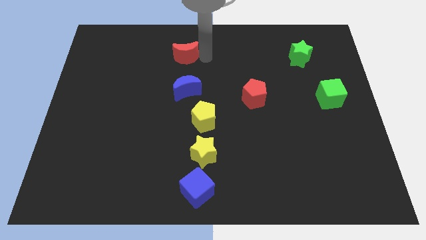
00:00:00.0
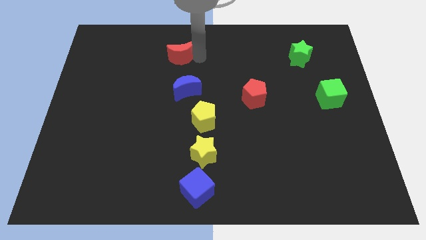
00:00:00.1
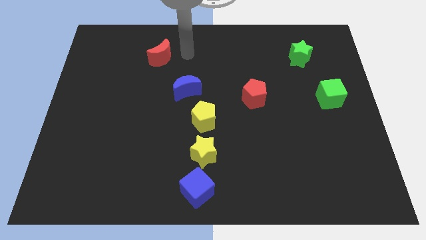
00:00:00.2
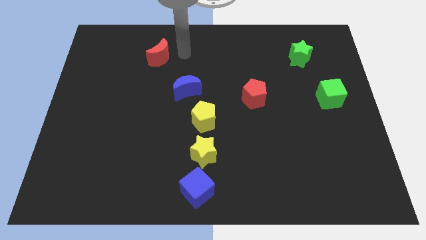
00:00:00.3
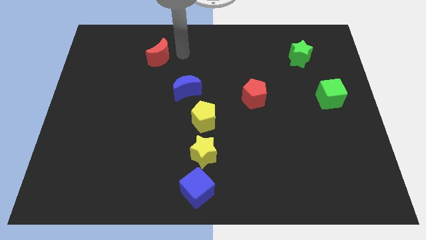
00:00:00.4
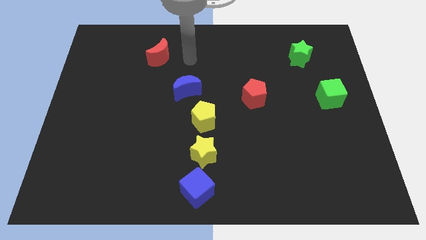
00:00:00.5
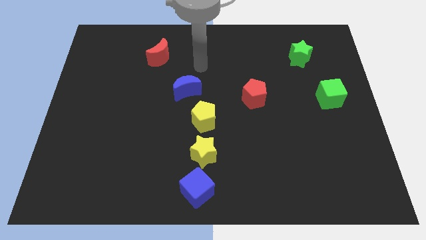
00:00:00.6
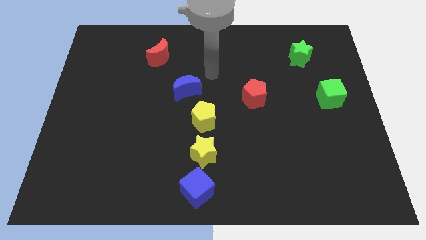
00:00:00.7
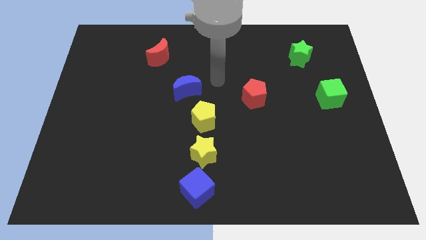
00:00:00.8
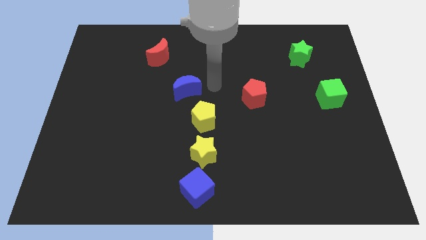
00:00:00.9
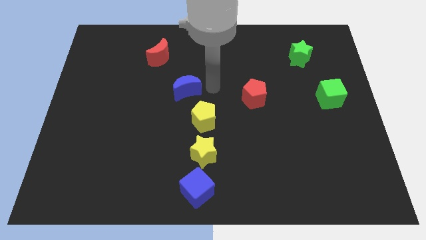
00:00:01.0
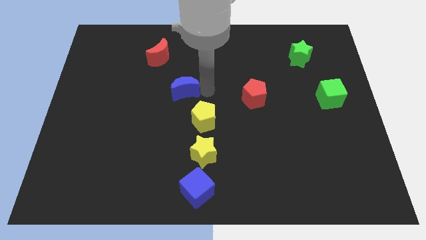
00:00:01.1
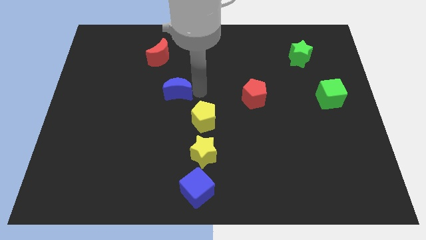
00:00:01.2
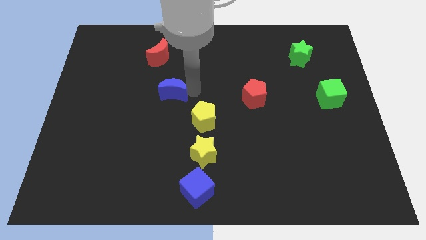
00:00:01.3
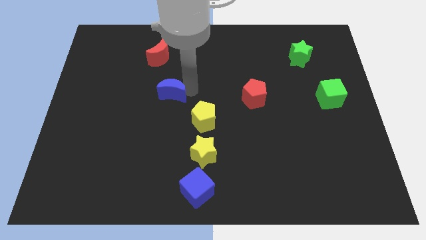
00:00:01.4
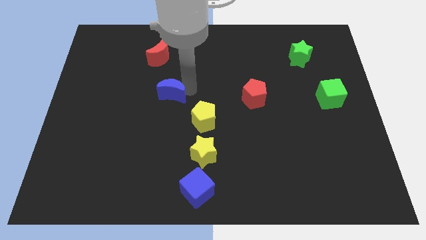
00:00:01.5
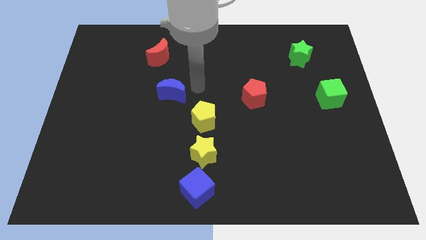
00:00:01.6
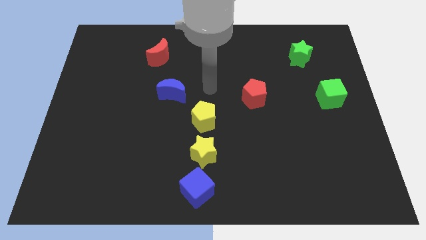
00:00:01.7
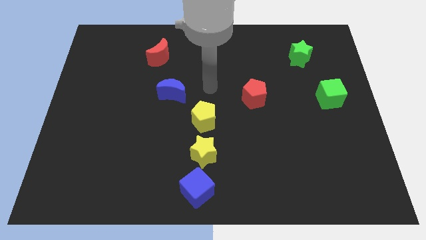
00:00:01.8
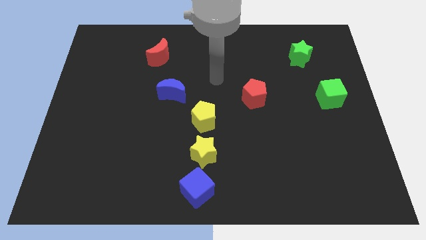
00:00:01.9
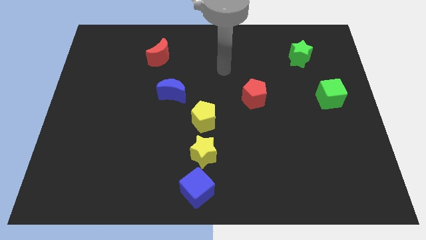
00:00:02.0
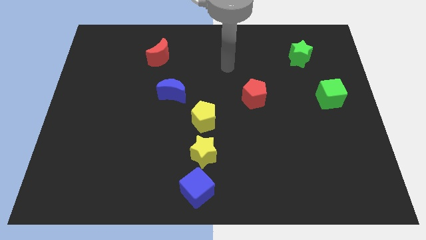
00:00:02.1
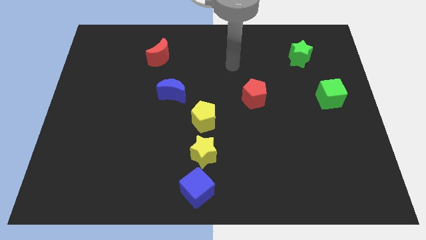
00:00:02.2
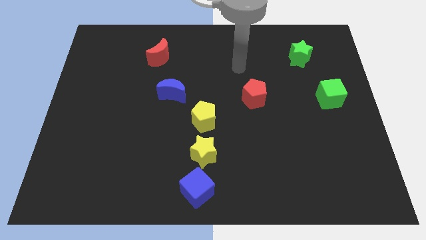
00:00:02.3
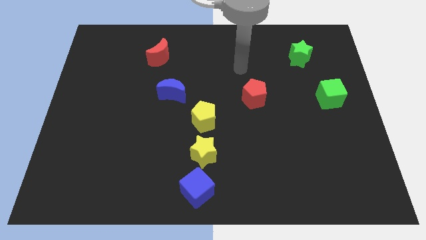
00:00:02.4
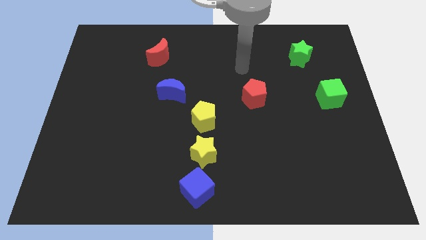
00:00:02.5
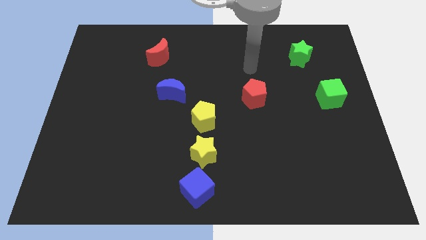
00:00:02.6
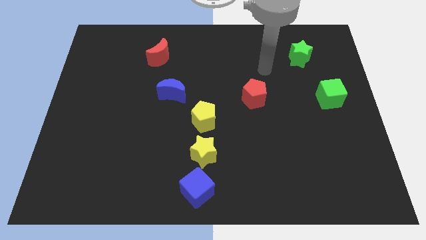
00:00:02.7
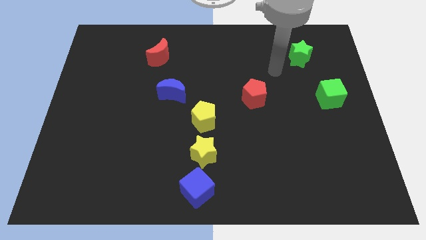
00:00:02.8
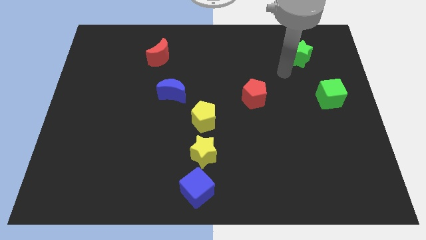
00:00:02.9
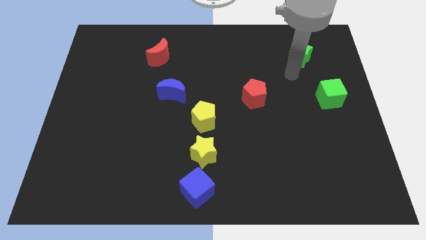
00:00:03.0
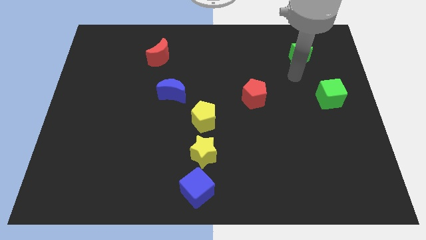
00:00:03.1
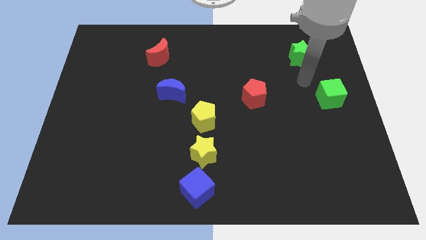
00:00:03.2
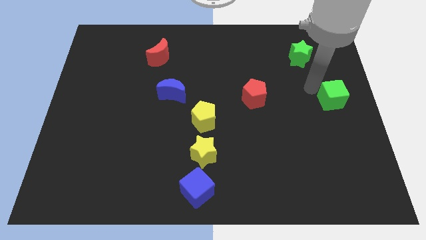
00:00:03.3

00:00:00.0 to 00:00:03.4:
move the blue crescent and the red moon slightly to the left

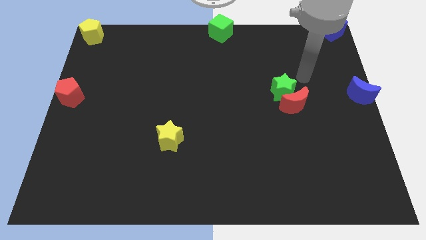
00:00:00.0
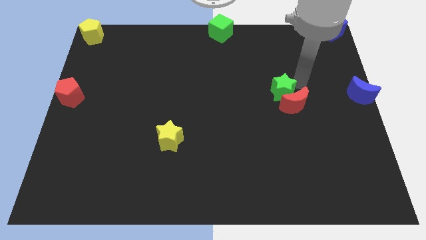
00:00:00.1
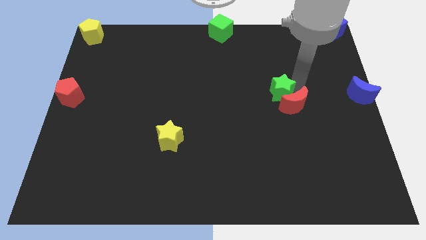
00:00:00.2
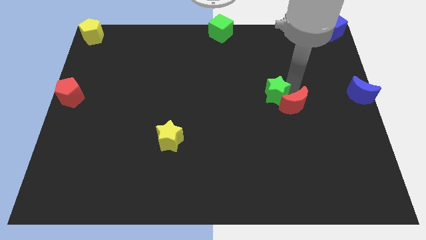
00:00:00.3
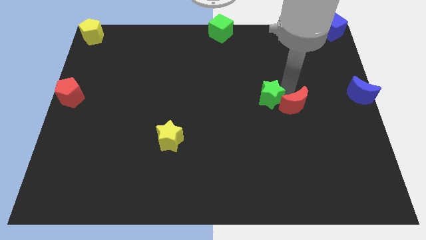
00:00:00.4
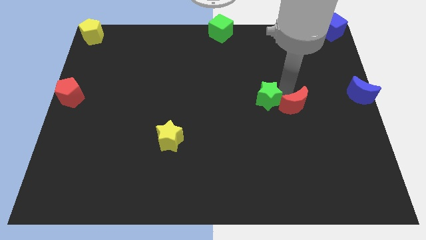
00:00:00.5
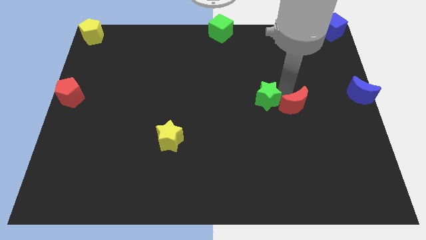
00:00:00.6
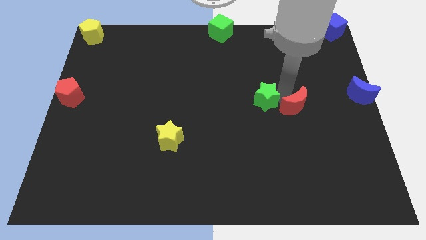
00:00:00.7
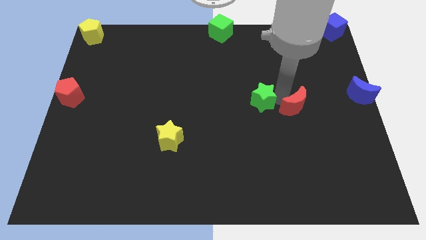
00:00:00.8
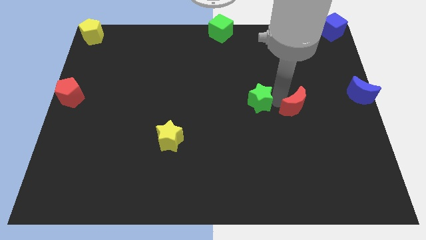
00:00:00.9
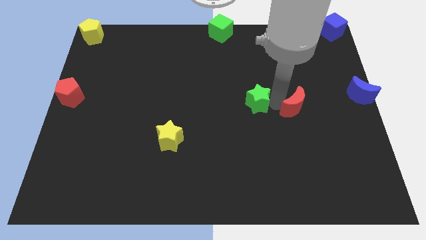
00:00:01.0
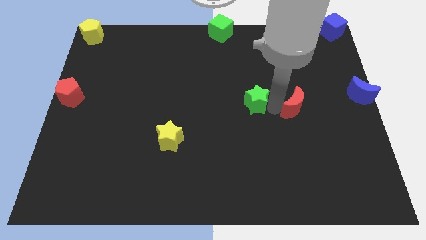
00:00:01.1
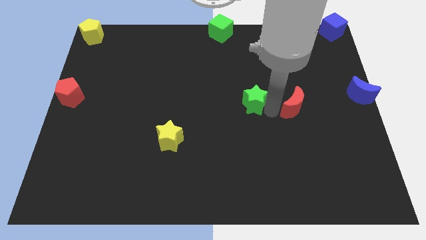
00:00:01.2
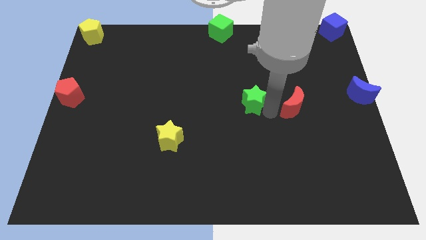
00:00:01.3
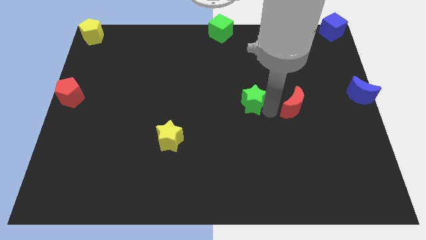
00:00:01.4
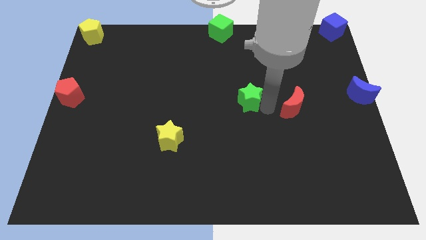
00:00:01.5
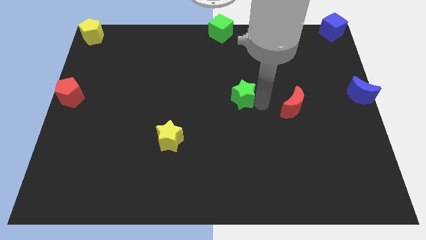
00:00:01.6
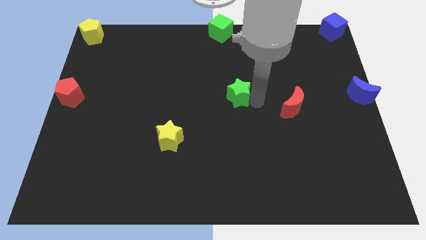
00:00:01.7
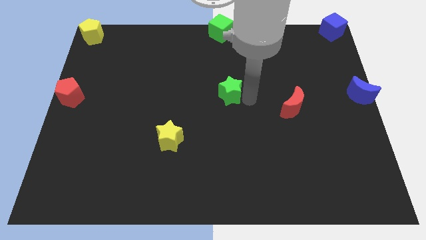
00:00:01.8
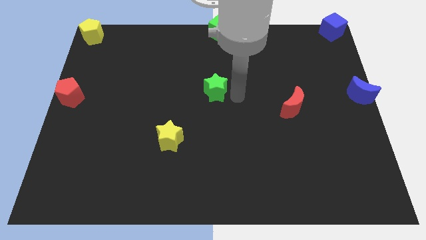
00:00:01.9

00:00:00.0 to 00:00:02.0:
push green star below green cube

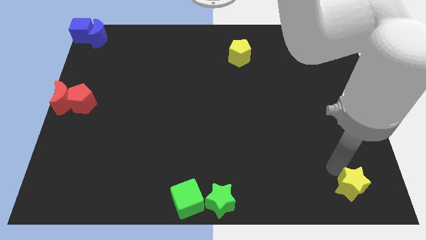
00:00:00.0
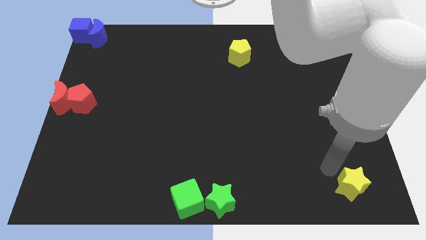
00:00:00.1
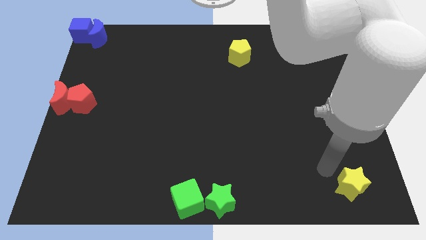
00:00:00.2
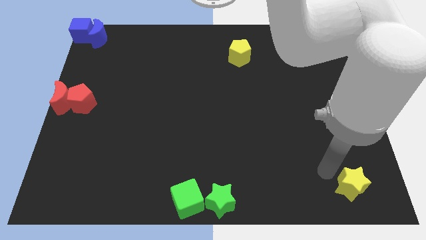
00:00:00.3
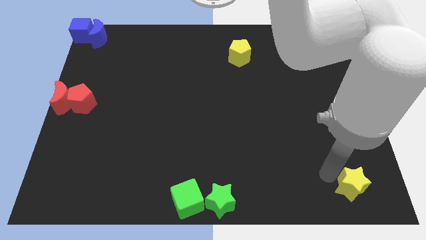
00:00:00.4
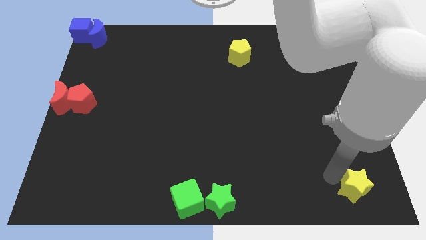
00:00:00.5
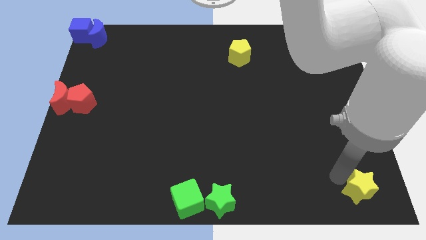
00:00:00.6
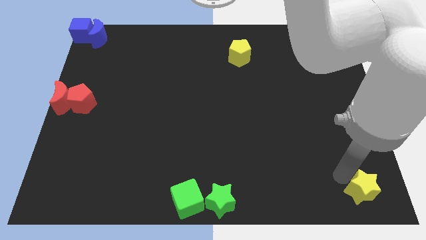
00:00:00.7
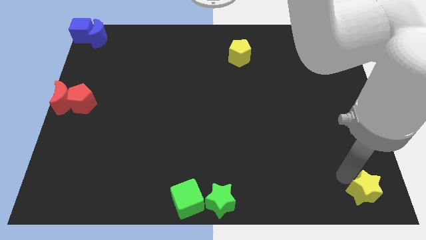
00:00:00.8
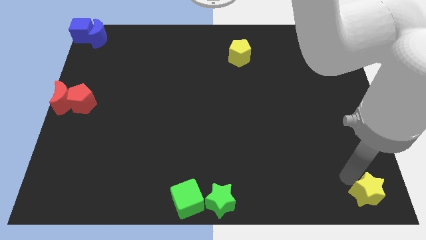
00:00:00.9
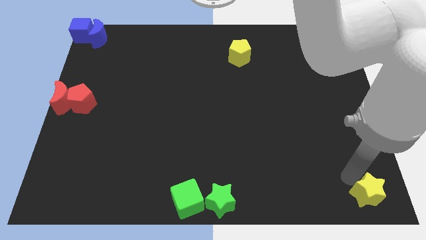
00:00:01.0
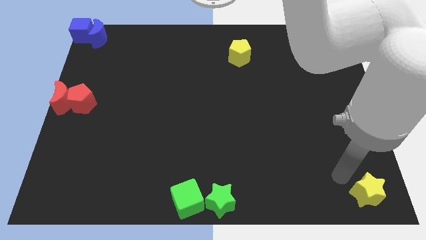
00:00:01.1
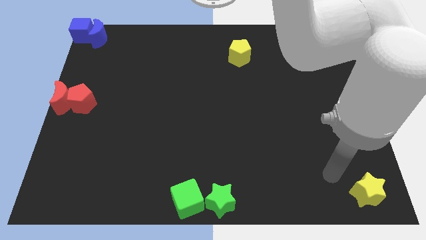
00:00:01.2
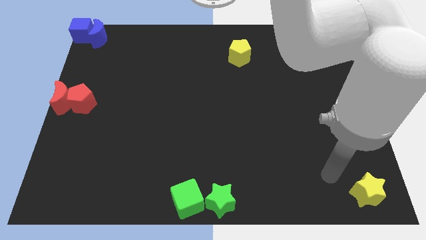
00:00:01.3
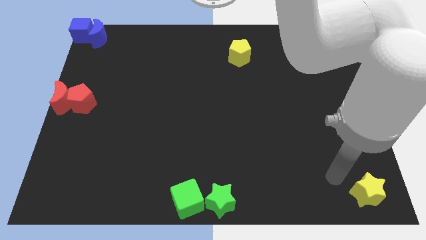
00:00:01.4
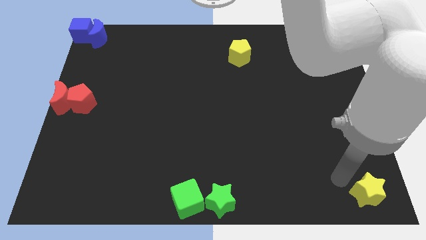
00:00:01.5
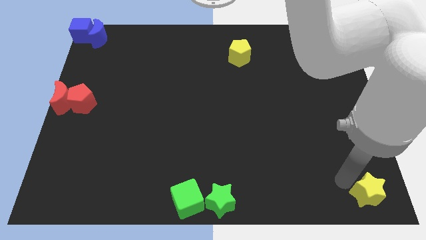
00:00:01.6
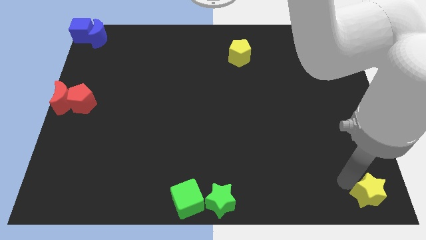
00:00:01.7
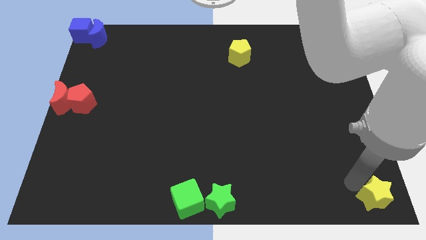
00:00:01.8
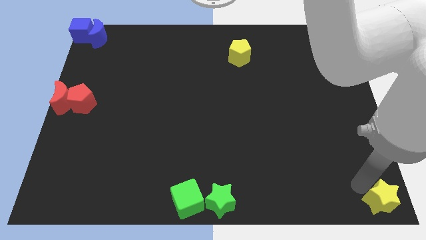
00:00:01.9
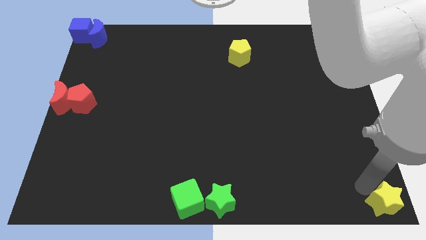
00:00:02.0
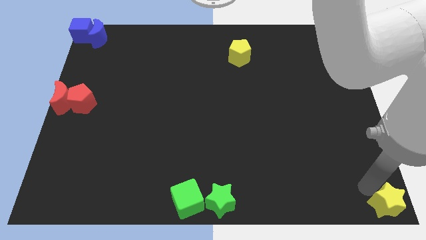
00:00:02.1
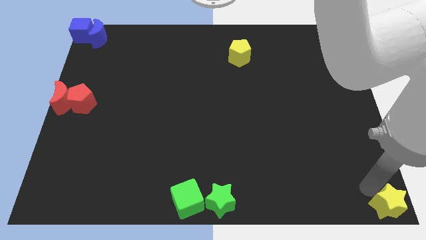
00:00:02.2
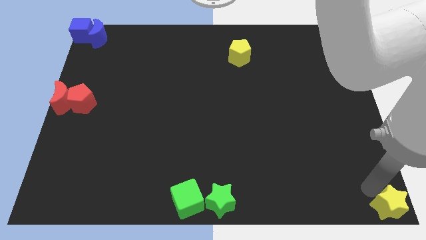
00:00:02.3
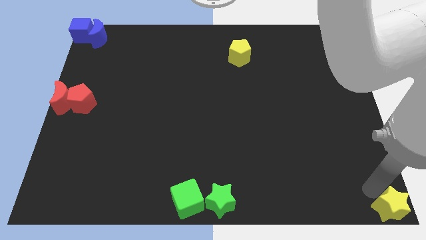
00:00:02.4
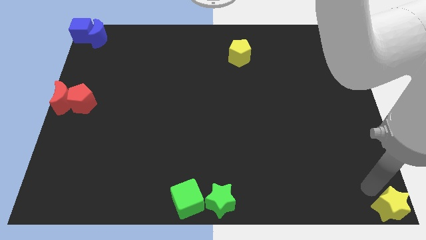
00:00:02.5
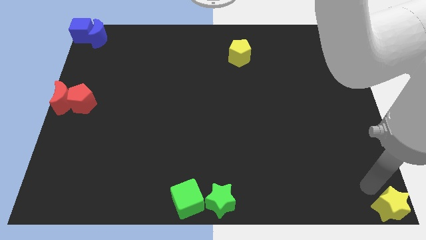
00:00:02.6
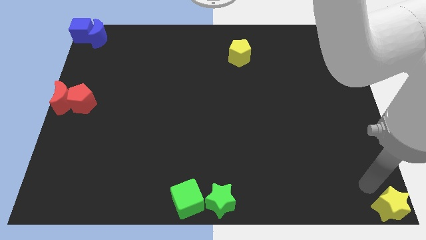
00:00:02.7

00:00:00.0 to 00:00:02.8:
move yellow star to the bottom right corner of the board

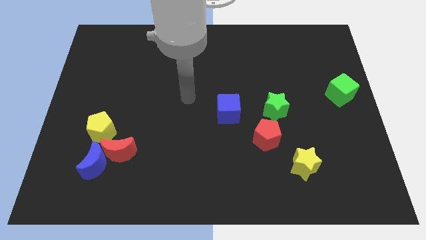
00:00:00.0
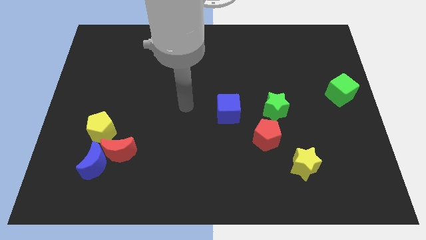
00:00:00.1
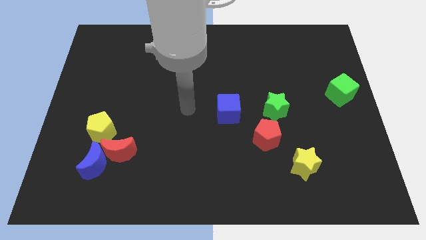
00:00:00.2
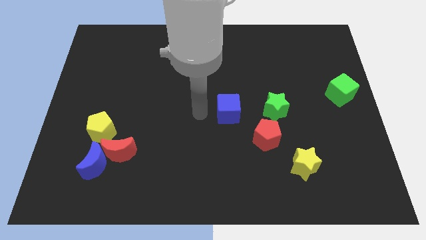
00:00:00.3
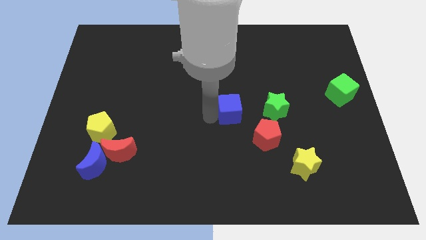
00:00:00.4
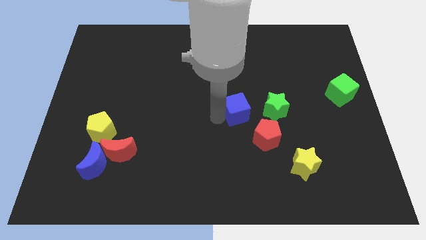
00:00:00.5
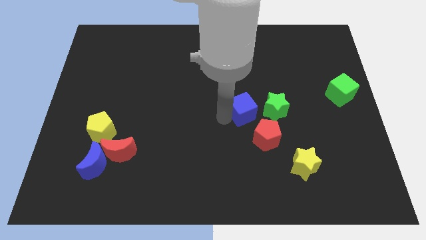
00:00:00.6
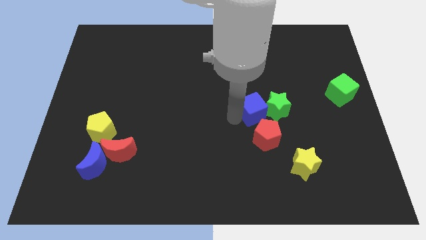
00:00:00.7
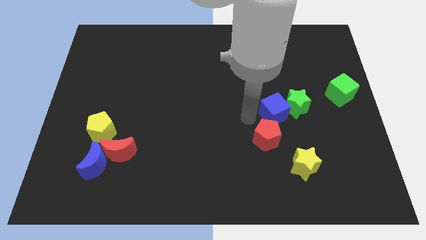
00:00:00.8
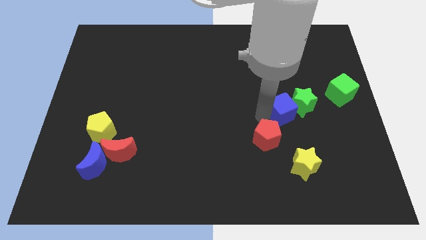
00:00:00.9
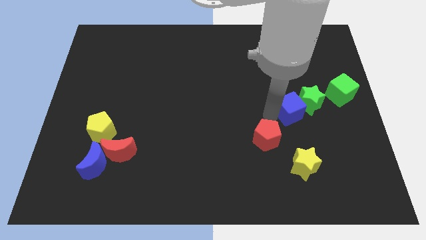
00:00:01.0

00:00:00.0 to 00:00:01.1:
move blue cube into green star
